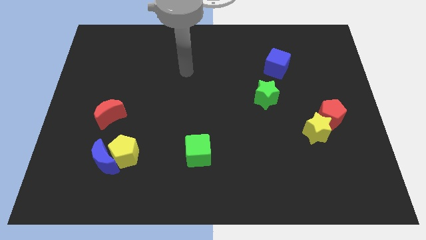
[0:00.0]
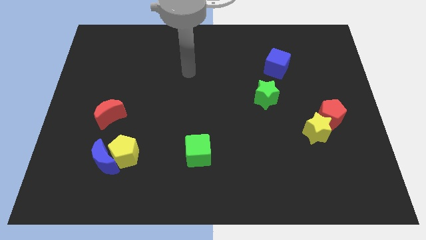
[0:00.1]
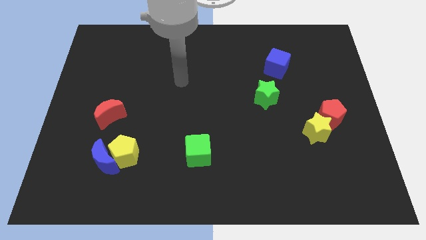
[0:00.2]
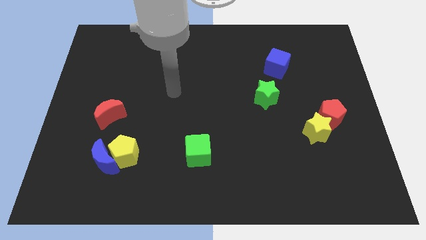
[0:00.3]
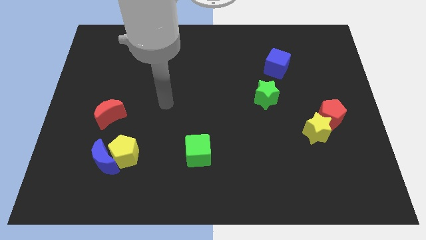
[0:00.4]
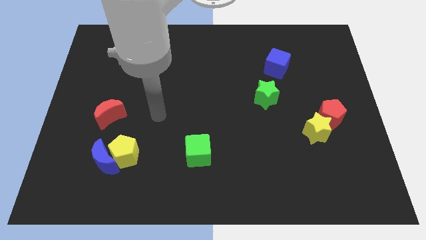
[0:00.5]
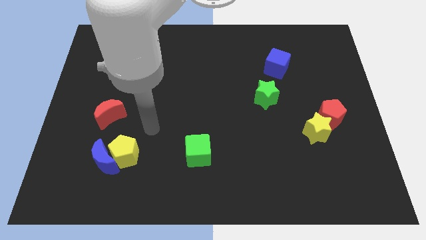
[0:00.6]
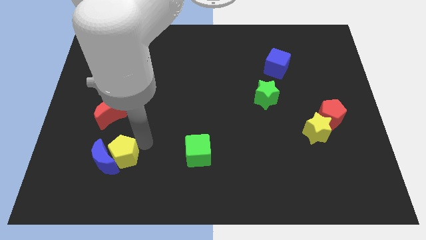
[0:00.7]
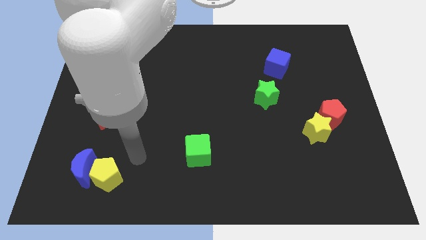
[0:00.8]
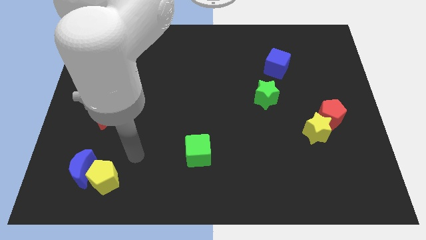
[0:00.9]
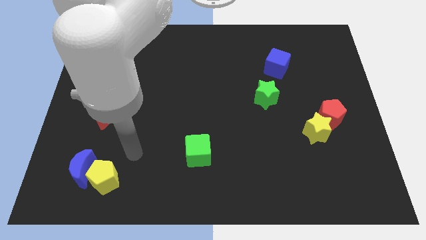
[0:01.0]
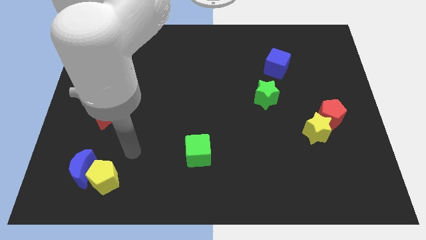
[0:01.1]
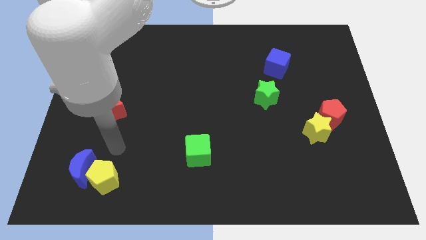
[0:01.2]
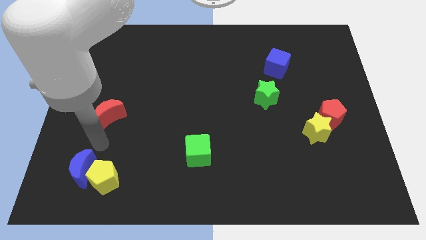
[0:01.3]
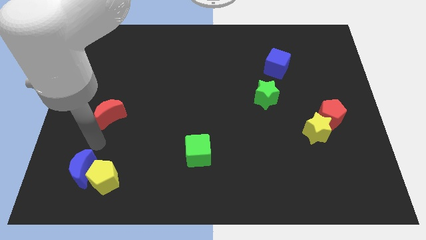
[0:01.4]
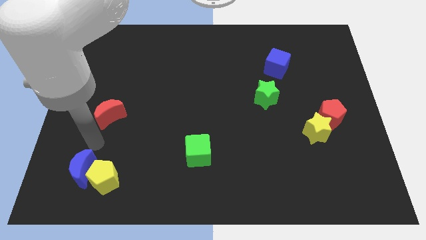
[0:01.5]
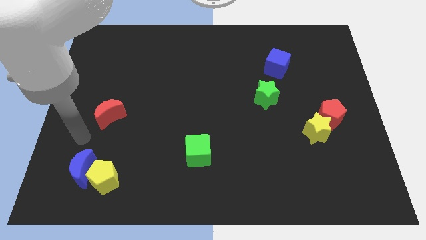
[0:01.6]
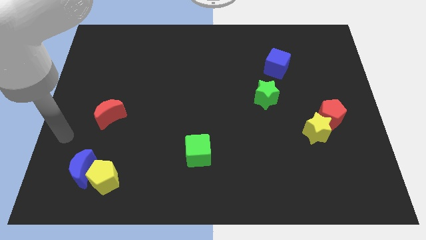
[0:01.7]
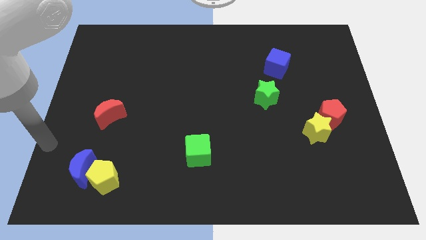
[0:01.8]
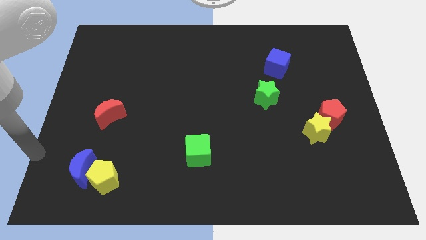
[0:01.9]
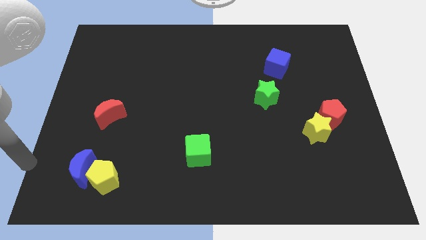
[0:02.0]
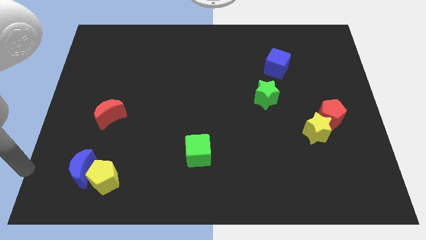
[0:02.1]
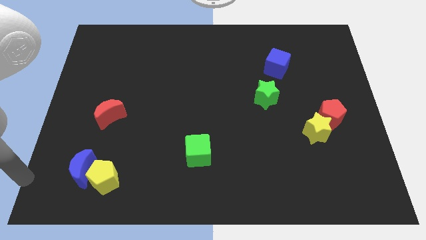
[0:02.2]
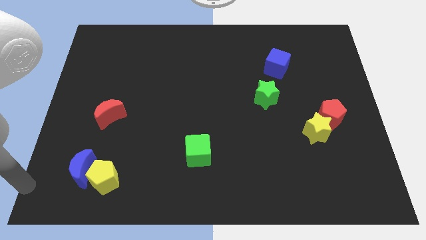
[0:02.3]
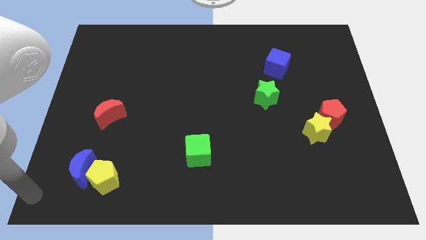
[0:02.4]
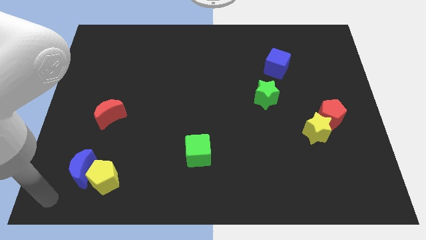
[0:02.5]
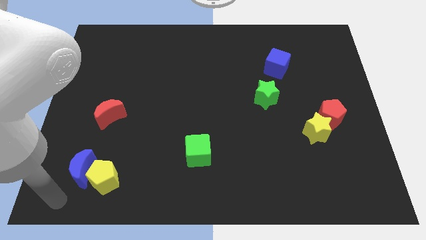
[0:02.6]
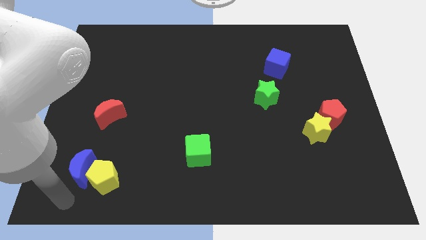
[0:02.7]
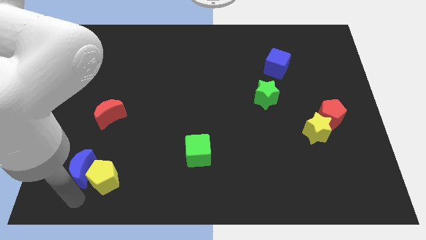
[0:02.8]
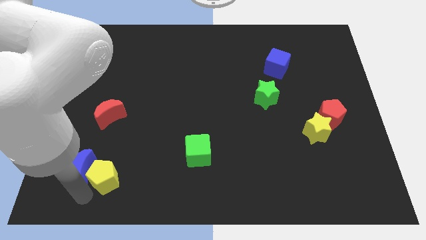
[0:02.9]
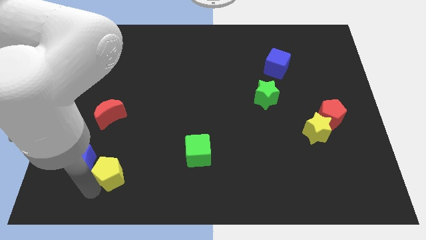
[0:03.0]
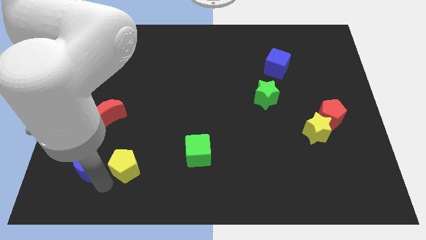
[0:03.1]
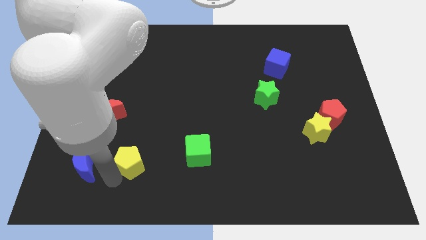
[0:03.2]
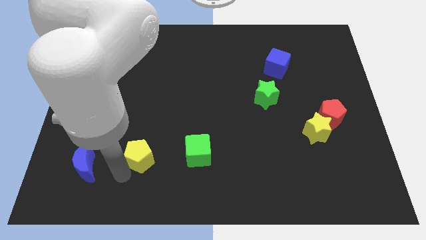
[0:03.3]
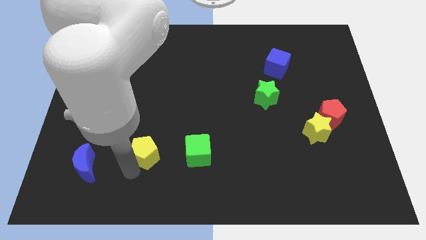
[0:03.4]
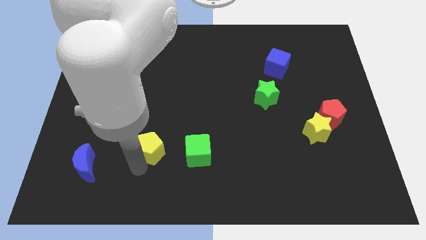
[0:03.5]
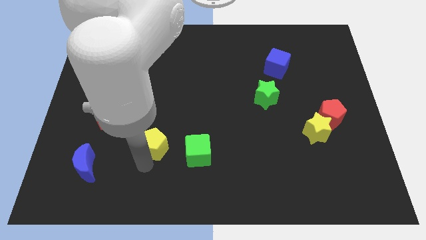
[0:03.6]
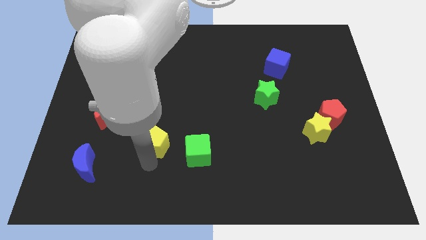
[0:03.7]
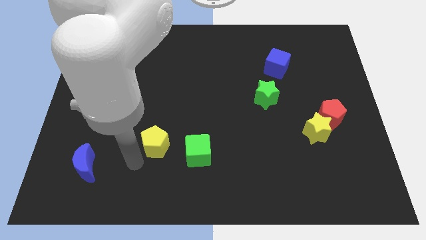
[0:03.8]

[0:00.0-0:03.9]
separate the blue crescent and the yellow pentagon

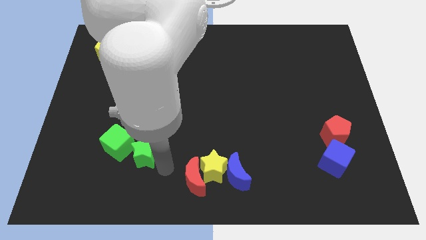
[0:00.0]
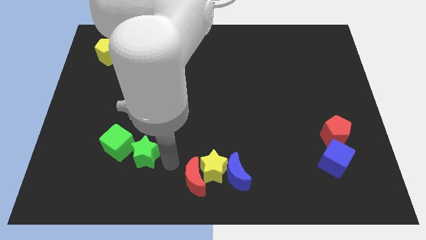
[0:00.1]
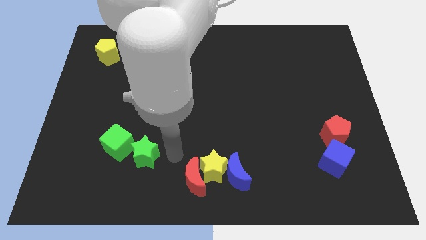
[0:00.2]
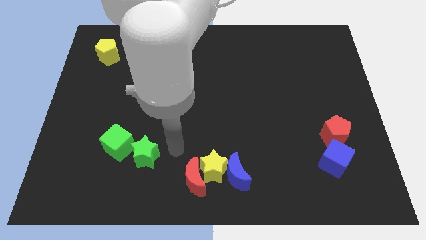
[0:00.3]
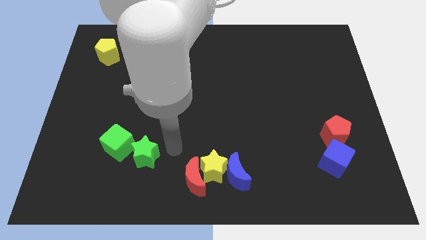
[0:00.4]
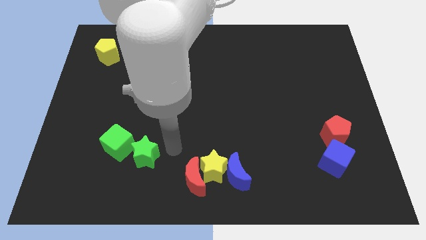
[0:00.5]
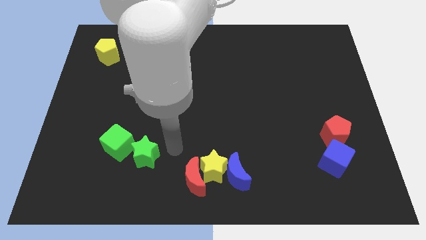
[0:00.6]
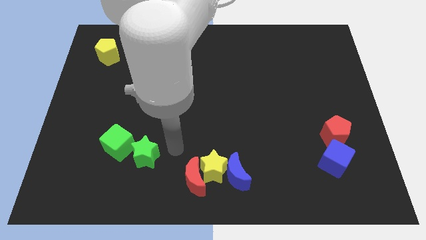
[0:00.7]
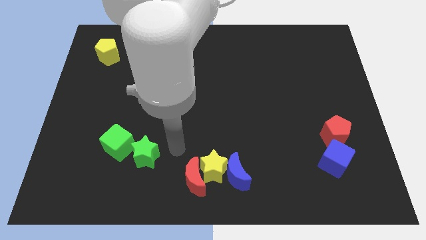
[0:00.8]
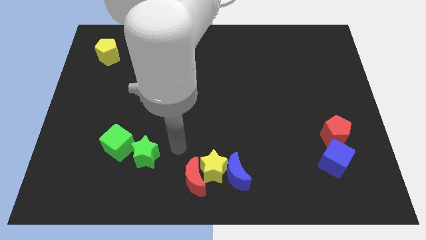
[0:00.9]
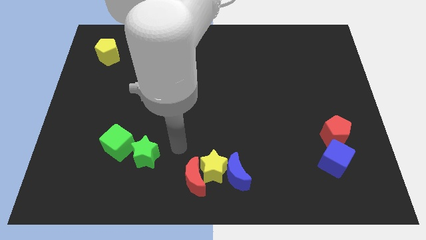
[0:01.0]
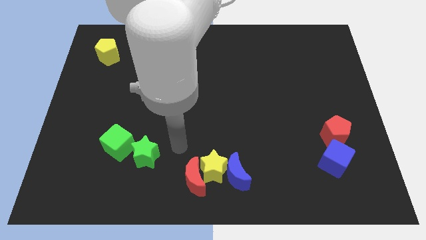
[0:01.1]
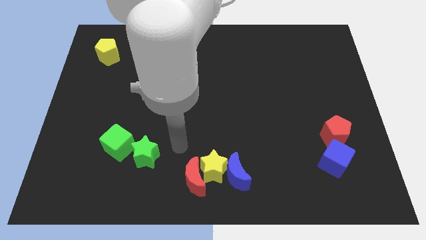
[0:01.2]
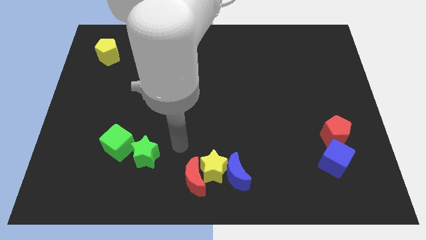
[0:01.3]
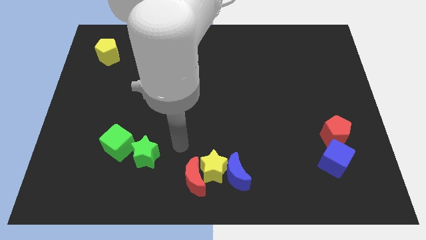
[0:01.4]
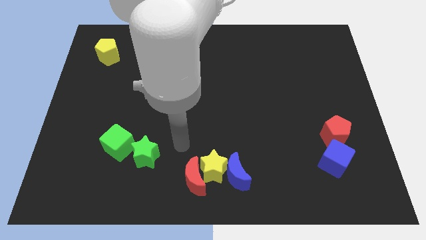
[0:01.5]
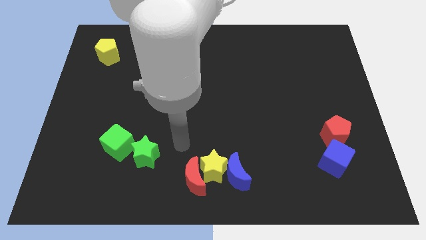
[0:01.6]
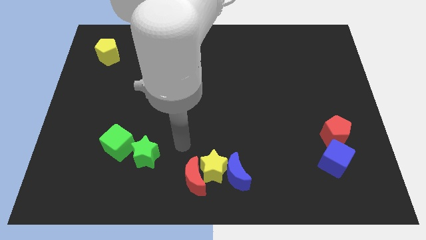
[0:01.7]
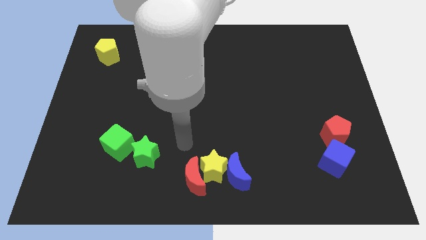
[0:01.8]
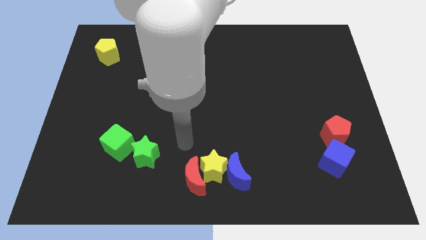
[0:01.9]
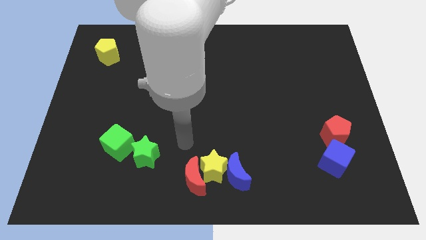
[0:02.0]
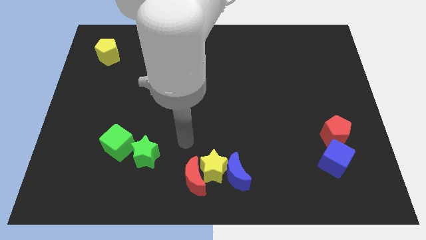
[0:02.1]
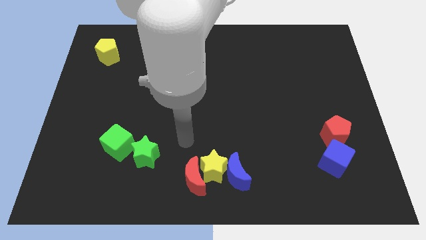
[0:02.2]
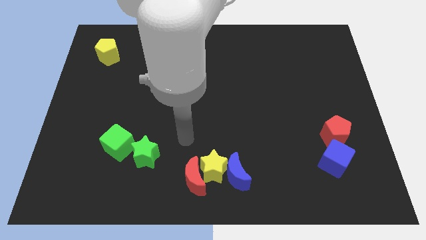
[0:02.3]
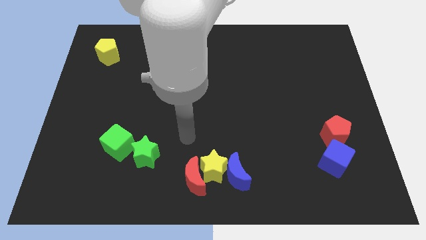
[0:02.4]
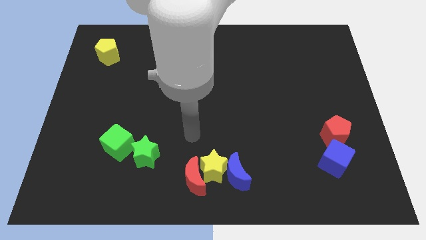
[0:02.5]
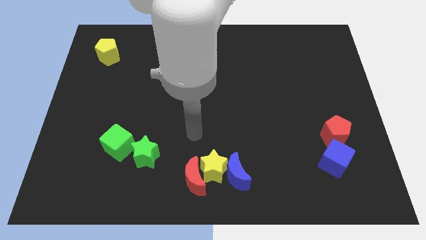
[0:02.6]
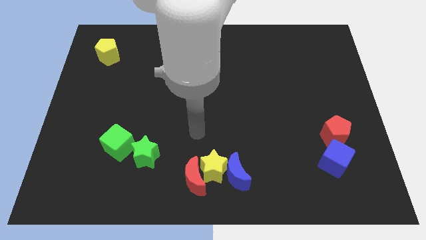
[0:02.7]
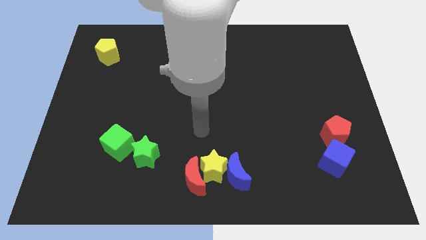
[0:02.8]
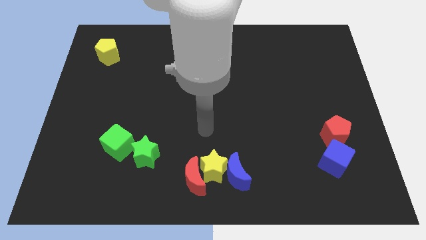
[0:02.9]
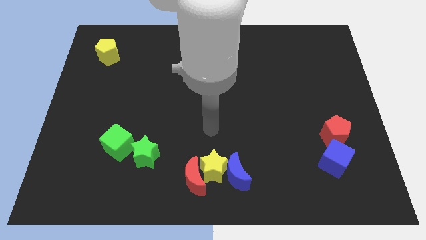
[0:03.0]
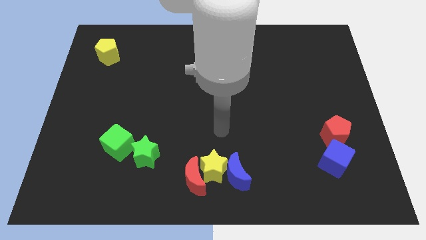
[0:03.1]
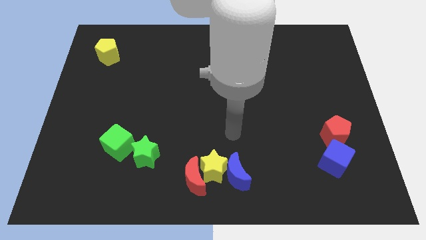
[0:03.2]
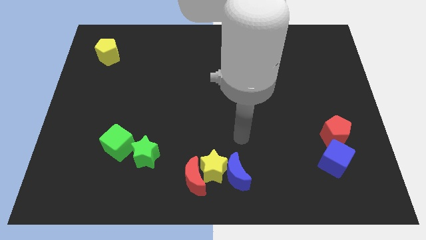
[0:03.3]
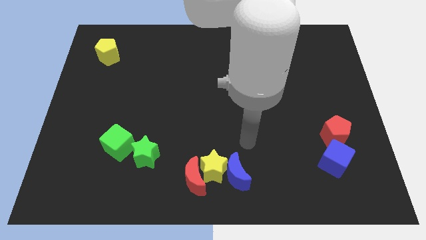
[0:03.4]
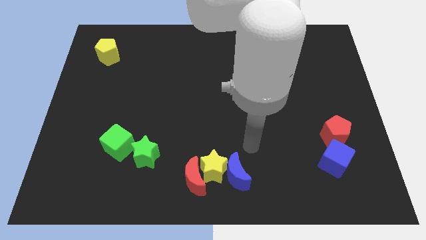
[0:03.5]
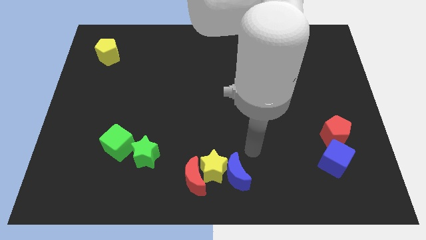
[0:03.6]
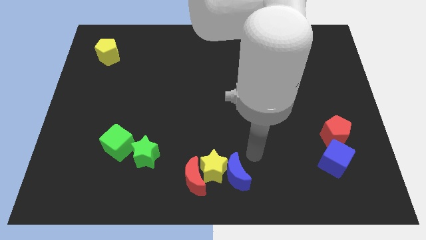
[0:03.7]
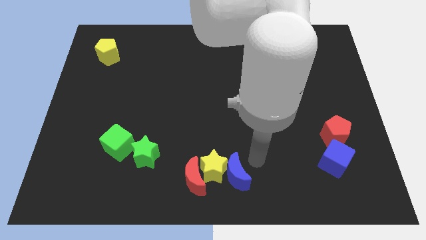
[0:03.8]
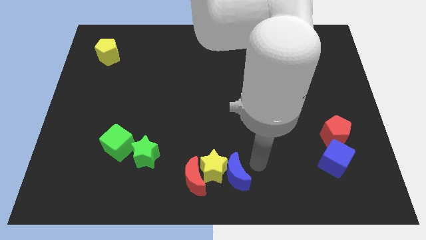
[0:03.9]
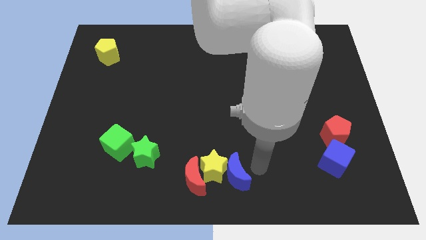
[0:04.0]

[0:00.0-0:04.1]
move the arm right to the blue crescent

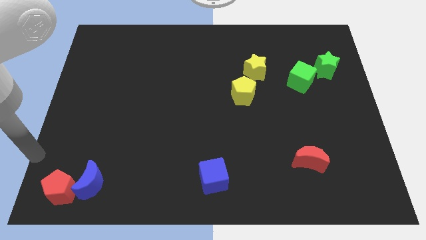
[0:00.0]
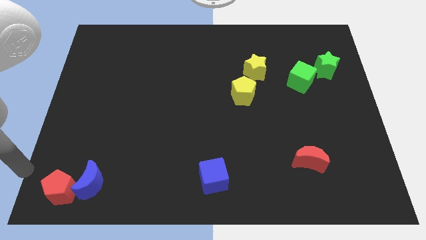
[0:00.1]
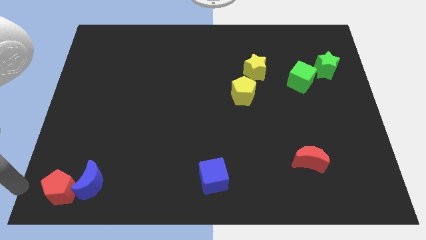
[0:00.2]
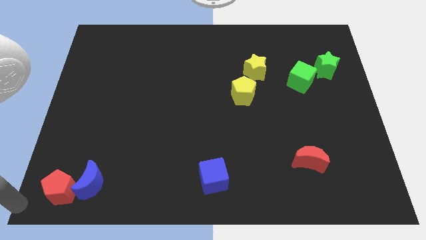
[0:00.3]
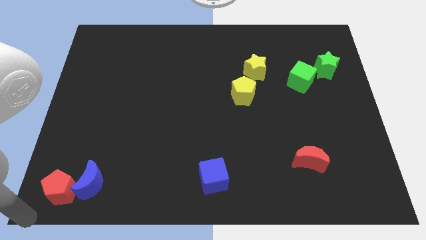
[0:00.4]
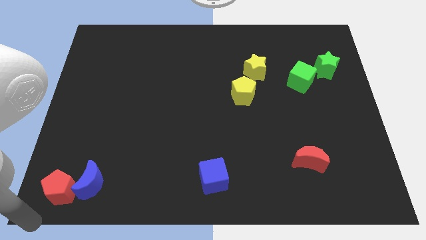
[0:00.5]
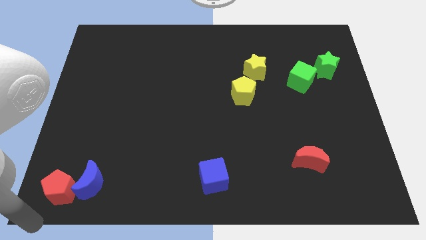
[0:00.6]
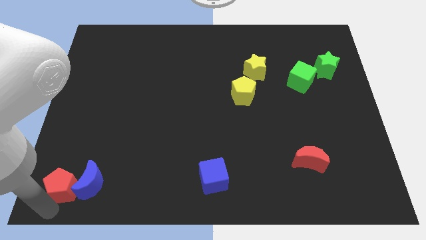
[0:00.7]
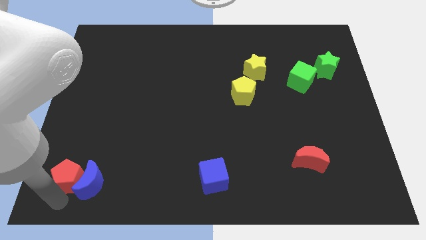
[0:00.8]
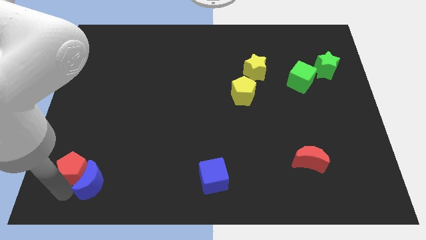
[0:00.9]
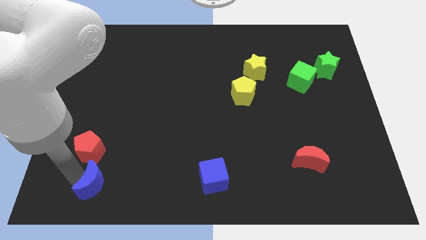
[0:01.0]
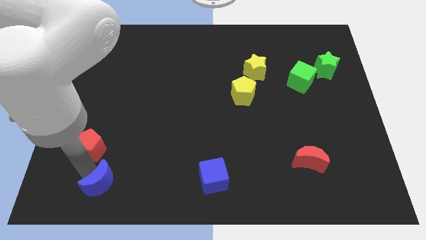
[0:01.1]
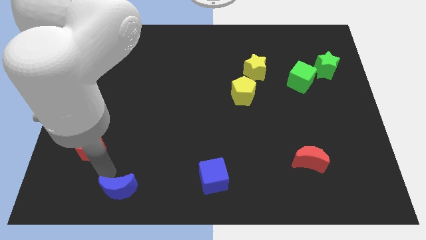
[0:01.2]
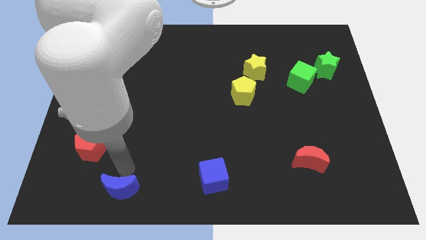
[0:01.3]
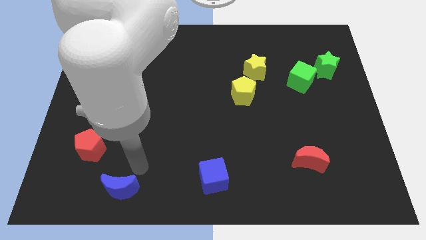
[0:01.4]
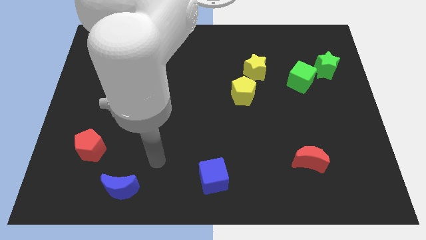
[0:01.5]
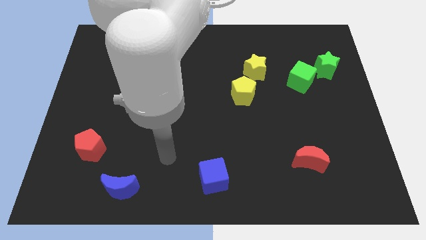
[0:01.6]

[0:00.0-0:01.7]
separate the red pentagon and blue moon
